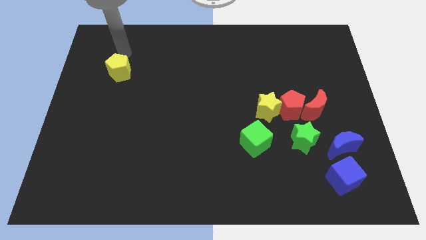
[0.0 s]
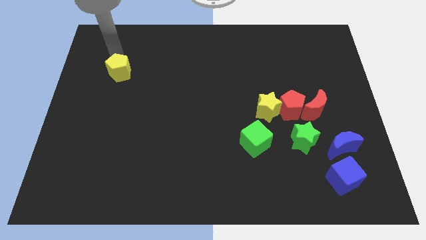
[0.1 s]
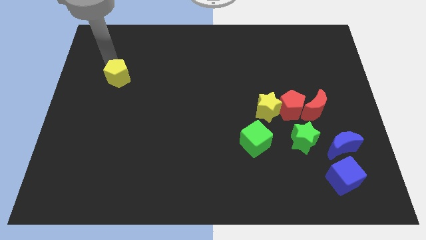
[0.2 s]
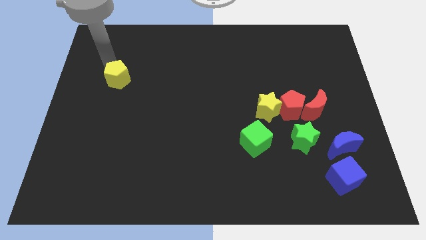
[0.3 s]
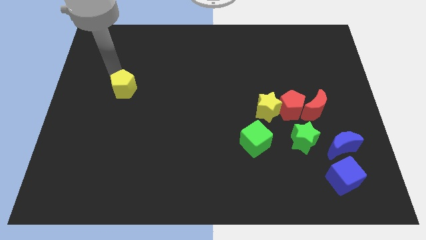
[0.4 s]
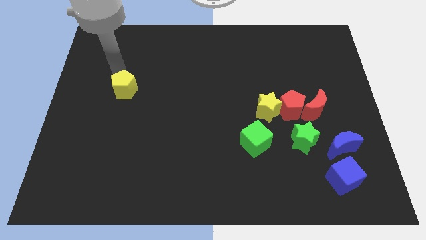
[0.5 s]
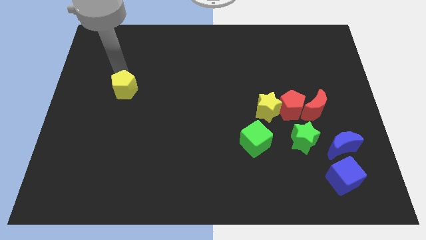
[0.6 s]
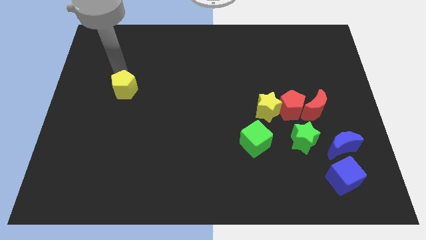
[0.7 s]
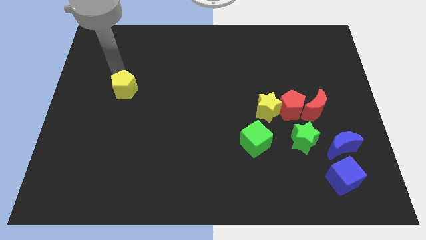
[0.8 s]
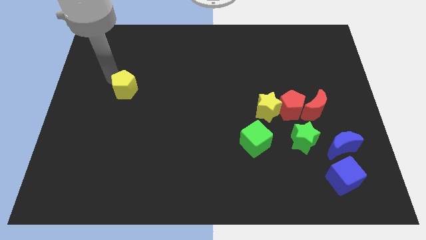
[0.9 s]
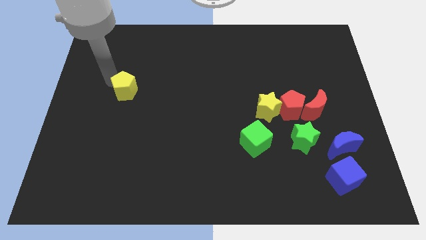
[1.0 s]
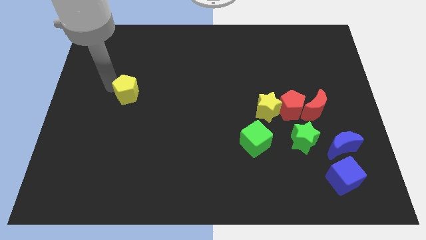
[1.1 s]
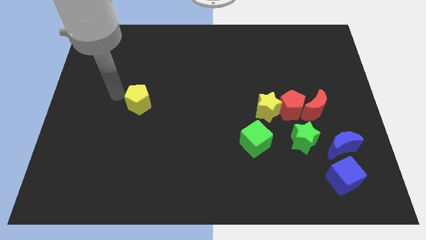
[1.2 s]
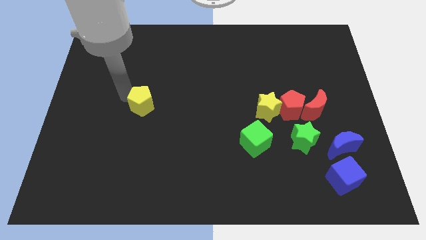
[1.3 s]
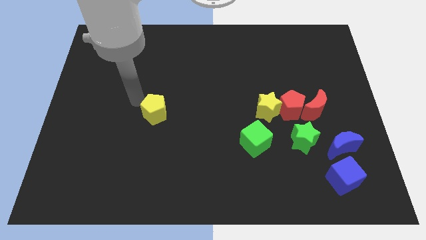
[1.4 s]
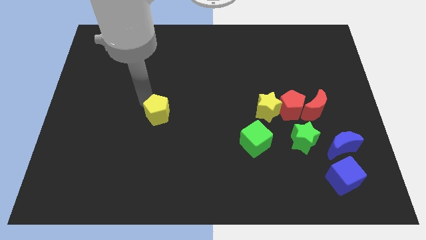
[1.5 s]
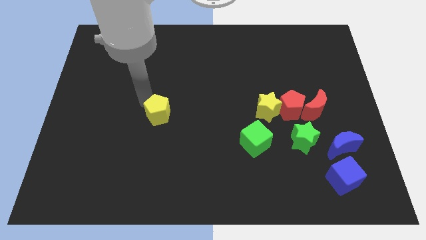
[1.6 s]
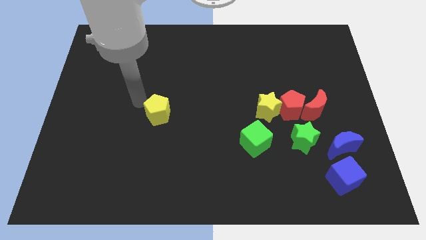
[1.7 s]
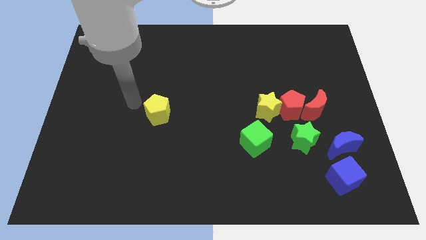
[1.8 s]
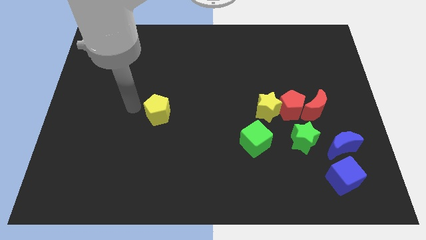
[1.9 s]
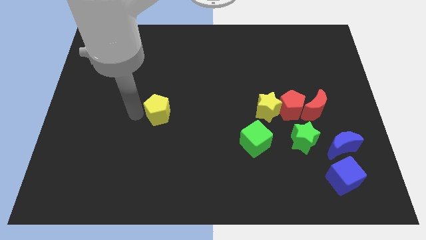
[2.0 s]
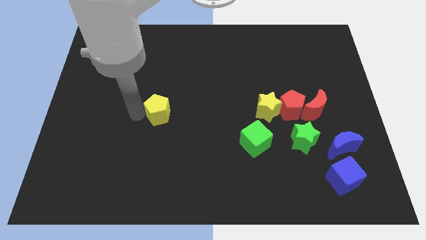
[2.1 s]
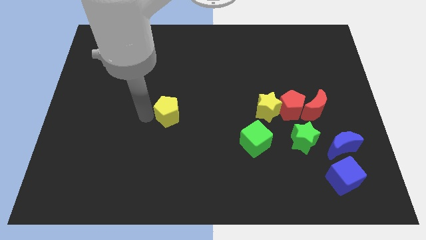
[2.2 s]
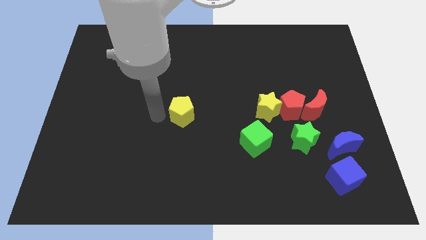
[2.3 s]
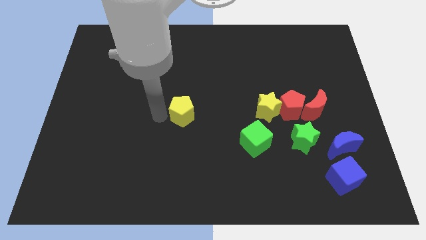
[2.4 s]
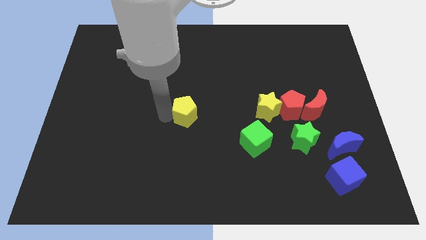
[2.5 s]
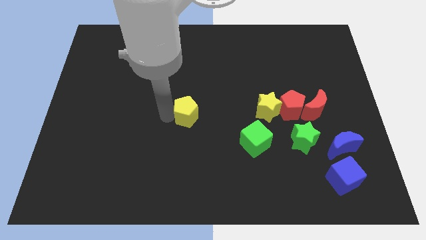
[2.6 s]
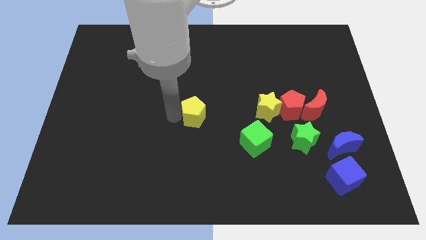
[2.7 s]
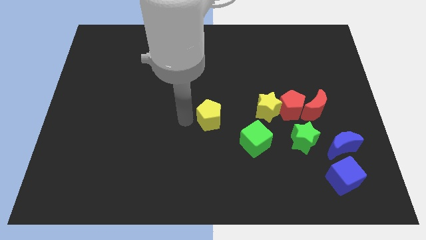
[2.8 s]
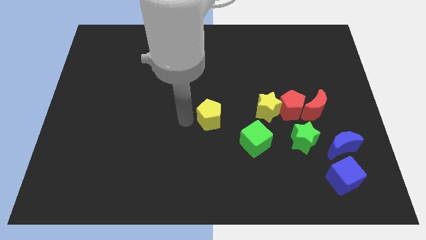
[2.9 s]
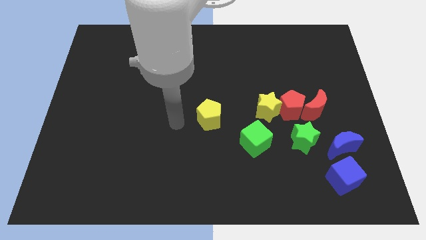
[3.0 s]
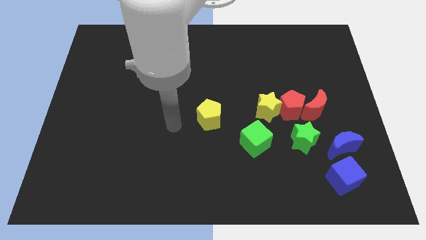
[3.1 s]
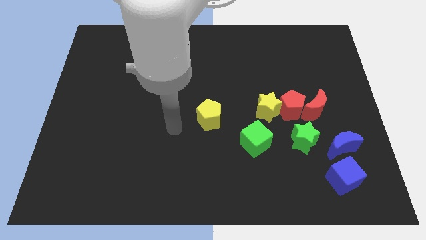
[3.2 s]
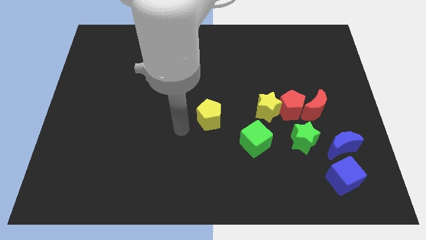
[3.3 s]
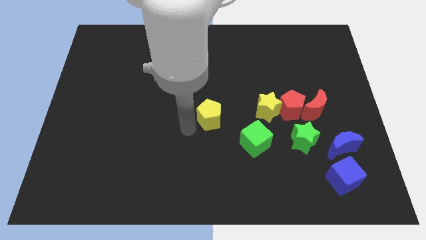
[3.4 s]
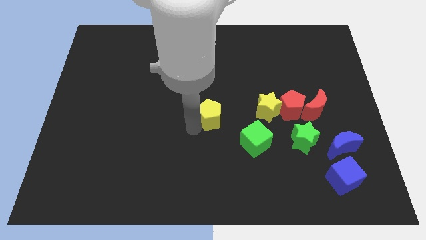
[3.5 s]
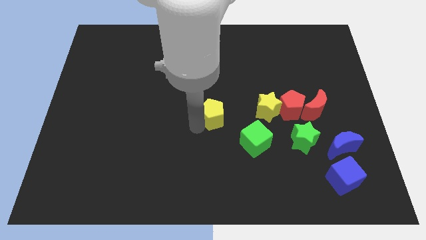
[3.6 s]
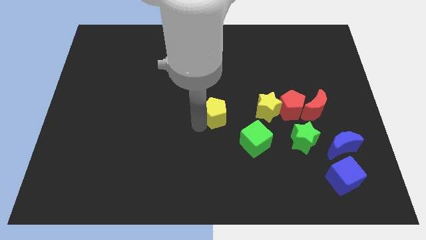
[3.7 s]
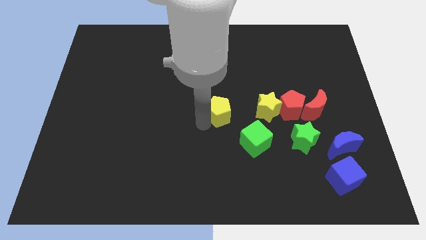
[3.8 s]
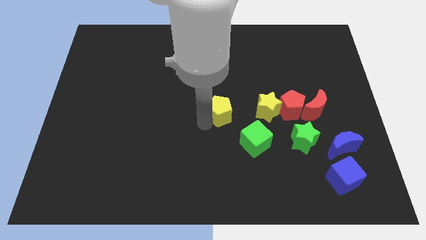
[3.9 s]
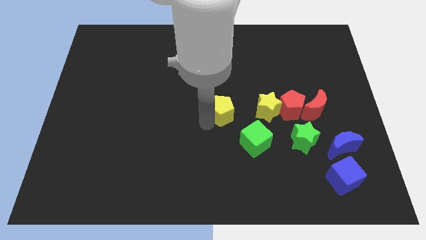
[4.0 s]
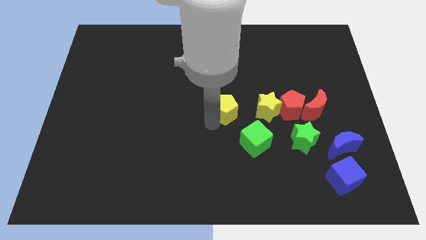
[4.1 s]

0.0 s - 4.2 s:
place the yellow pentagon left to the yellow star

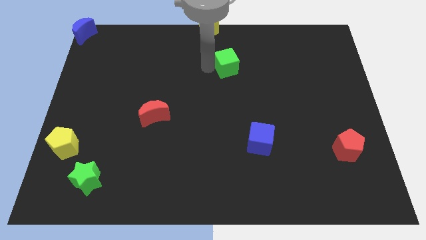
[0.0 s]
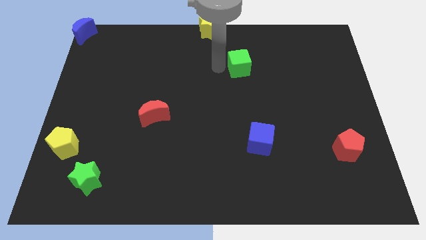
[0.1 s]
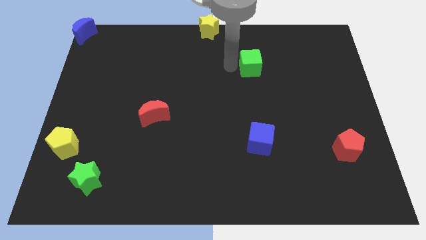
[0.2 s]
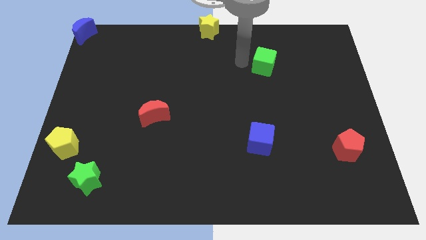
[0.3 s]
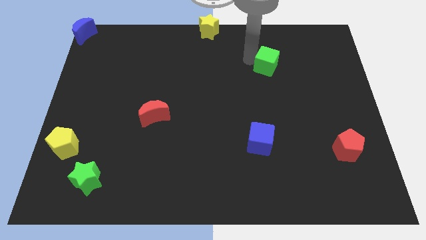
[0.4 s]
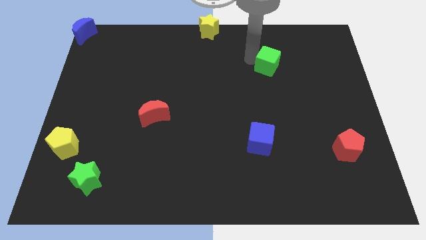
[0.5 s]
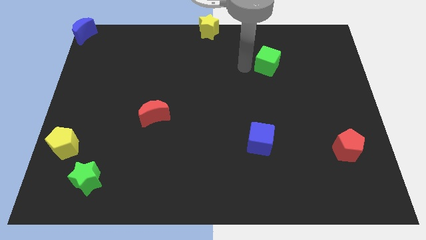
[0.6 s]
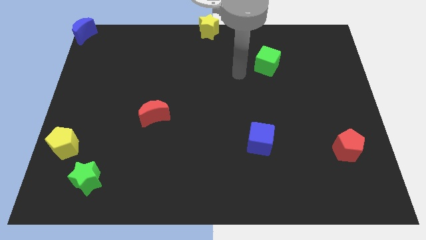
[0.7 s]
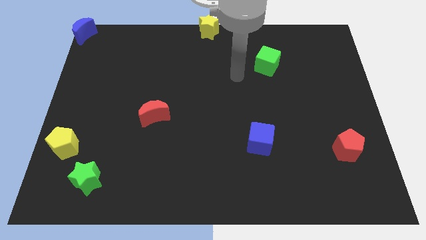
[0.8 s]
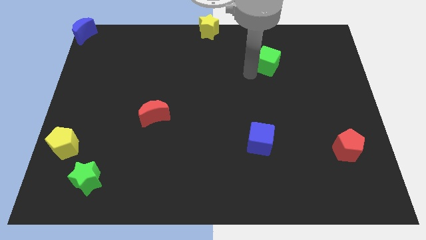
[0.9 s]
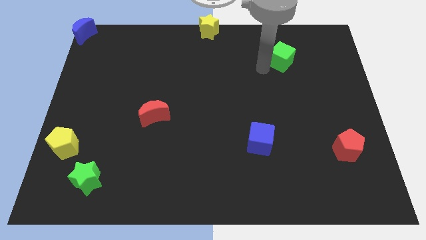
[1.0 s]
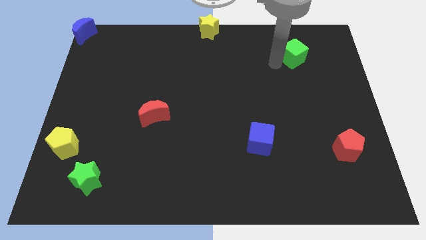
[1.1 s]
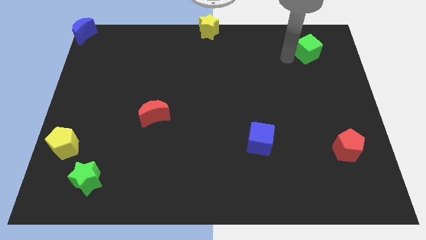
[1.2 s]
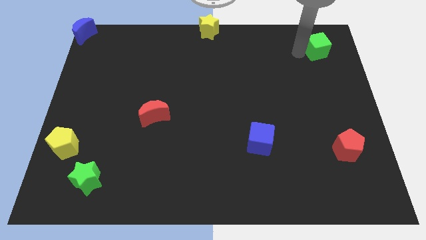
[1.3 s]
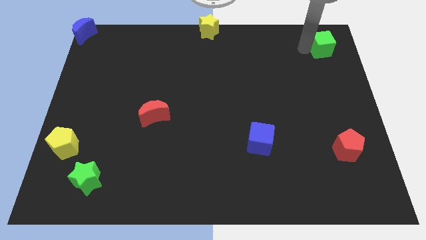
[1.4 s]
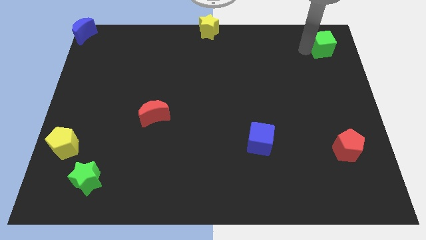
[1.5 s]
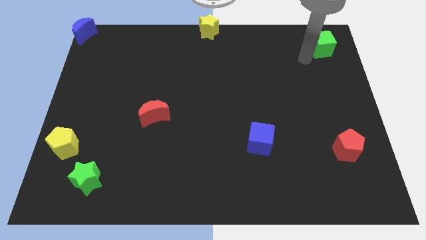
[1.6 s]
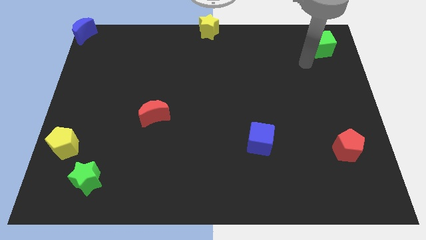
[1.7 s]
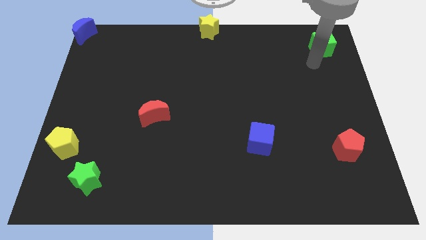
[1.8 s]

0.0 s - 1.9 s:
push the green star to the top right corner of the board

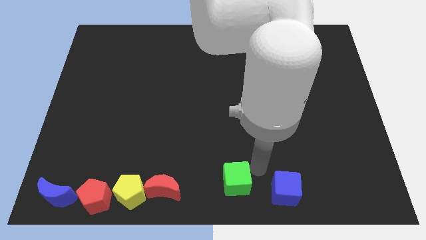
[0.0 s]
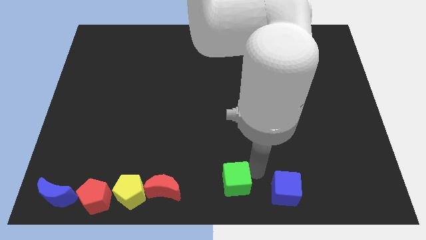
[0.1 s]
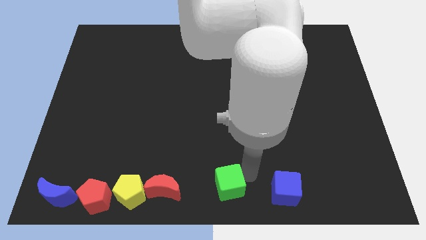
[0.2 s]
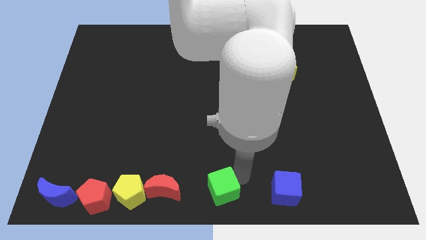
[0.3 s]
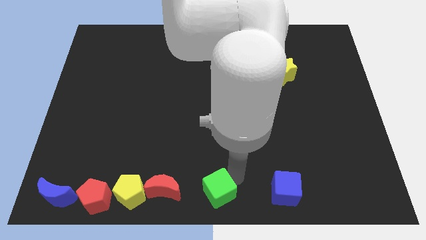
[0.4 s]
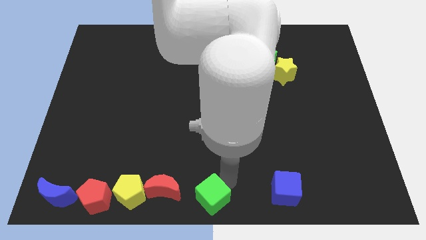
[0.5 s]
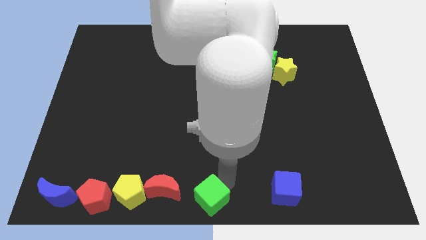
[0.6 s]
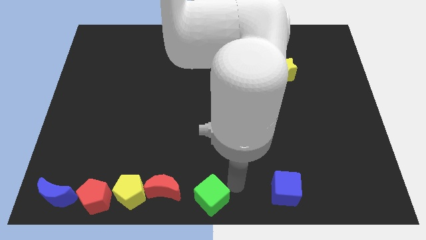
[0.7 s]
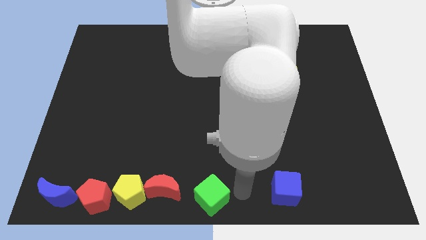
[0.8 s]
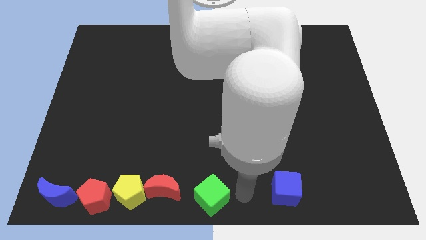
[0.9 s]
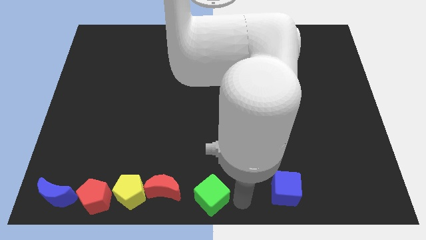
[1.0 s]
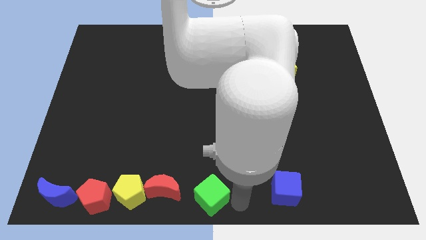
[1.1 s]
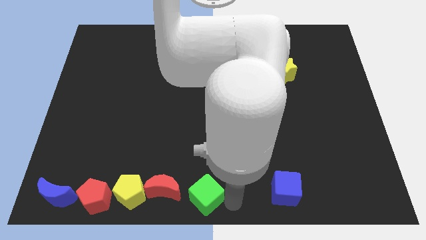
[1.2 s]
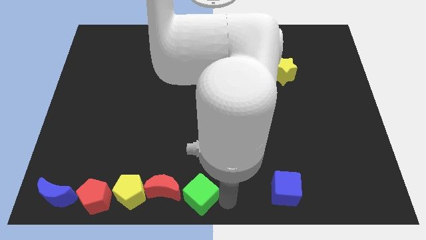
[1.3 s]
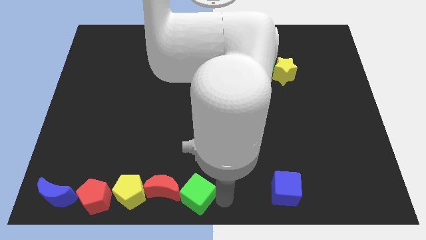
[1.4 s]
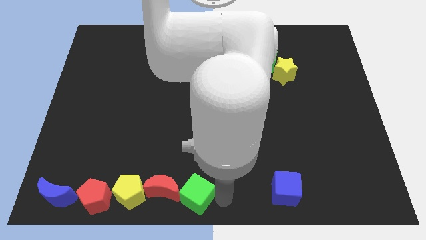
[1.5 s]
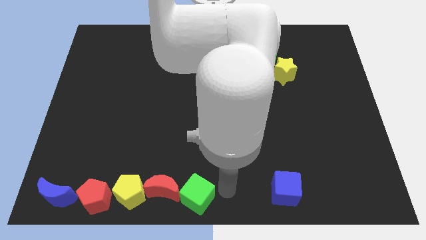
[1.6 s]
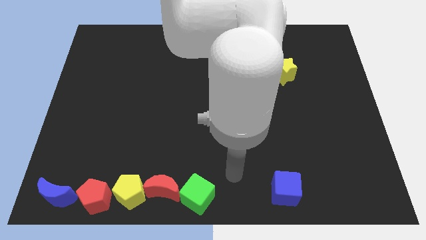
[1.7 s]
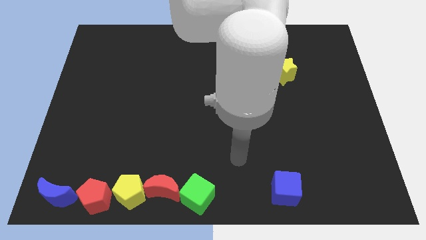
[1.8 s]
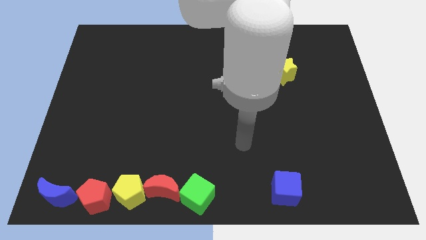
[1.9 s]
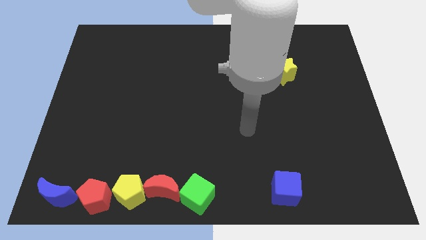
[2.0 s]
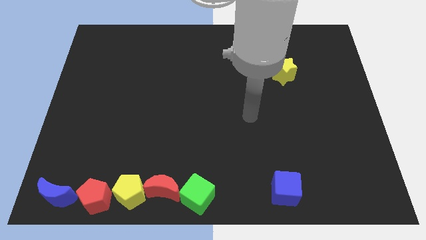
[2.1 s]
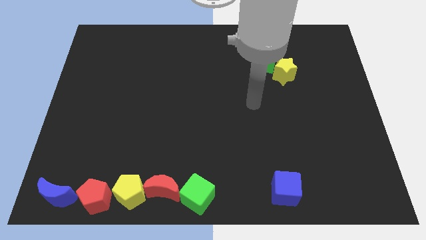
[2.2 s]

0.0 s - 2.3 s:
place a green cube on the right side of the red moon

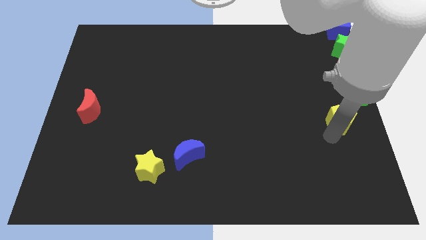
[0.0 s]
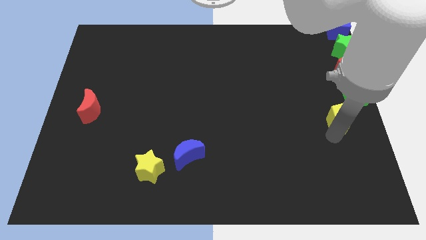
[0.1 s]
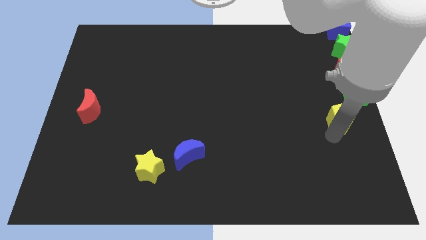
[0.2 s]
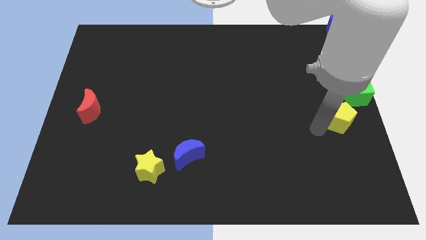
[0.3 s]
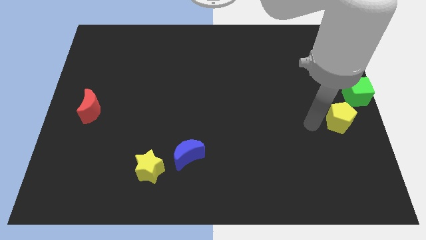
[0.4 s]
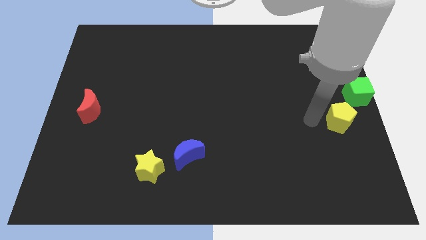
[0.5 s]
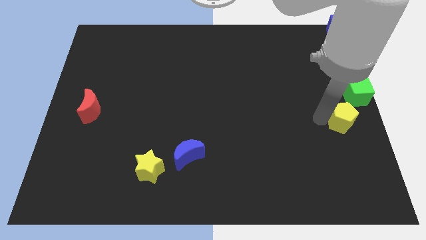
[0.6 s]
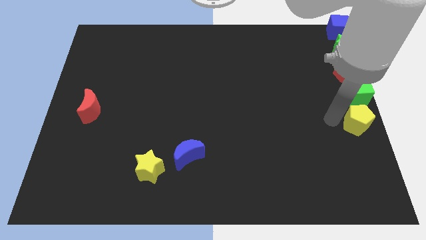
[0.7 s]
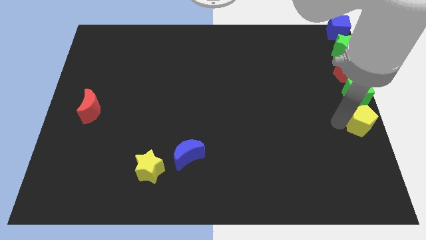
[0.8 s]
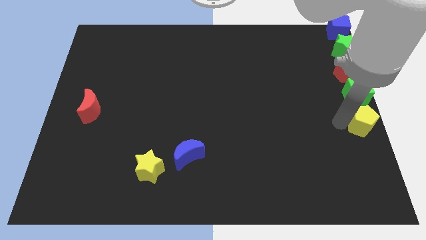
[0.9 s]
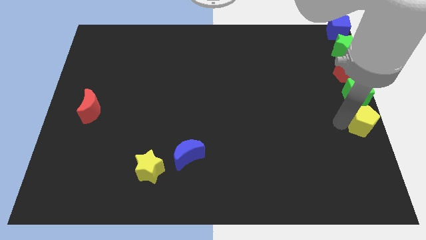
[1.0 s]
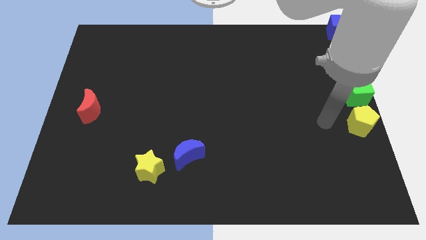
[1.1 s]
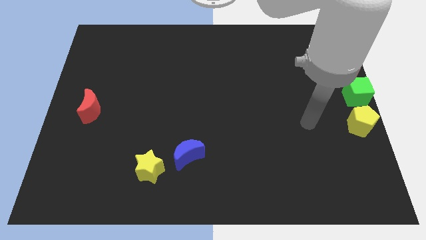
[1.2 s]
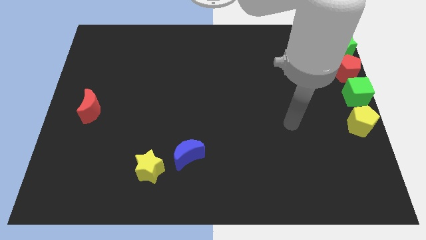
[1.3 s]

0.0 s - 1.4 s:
drag the yellow pentagon to the bottom of the green cube
